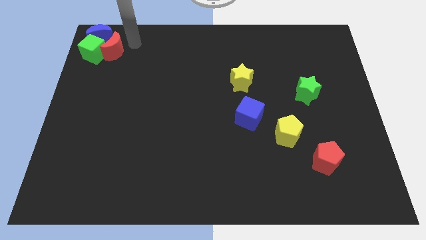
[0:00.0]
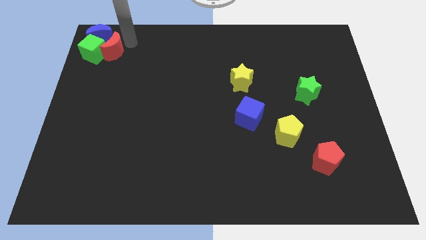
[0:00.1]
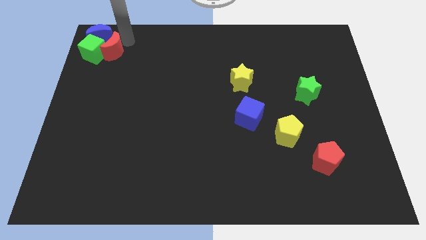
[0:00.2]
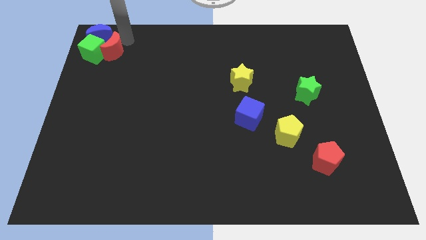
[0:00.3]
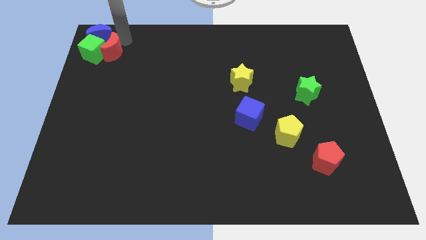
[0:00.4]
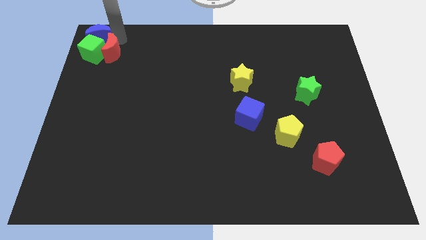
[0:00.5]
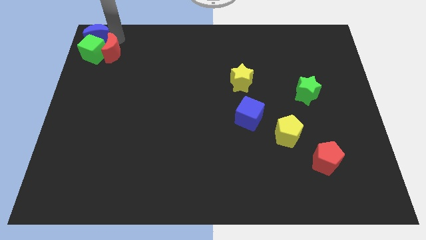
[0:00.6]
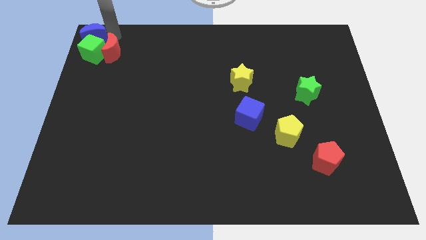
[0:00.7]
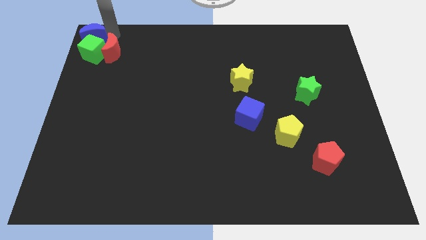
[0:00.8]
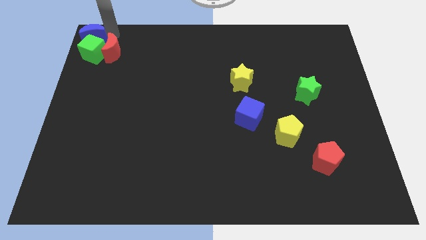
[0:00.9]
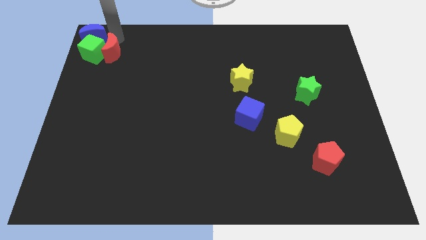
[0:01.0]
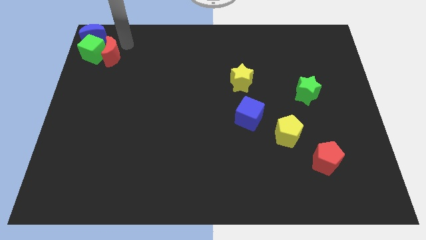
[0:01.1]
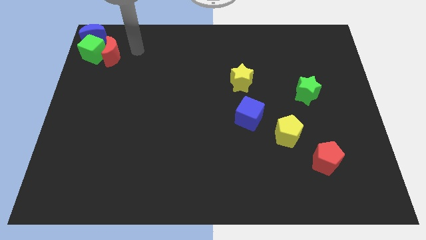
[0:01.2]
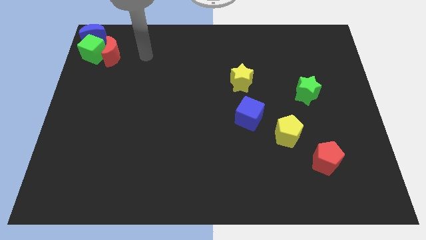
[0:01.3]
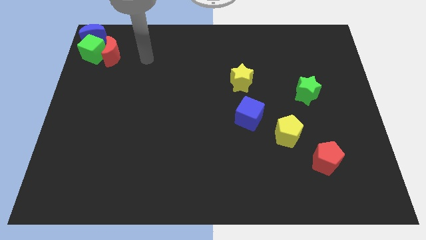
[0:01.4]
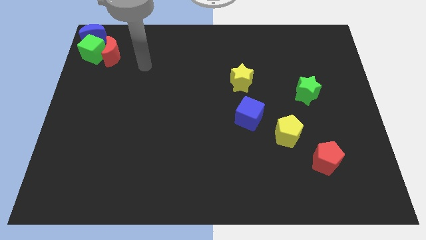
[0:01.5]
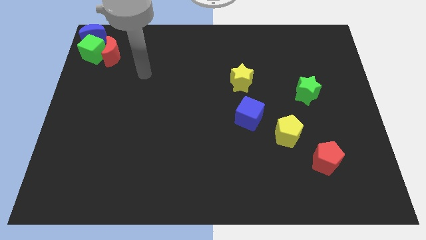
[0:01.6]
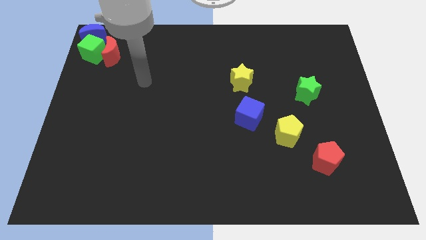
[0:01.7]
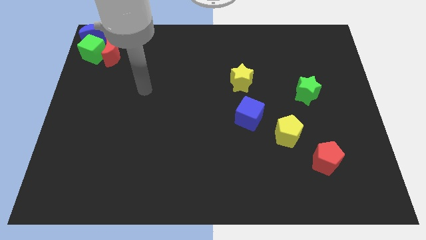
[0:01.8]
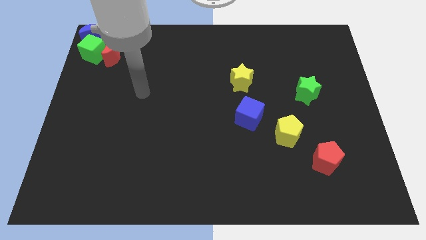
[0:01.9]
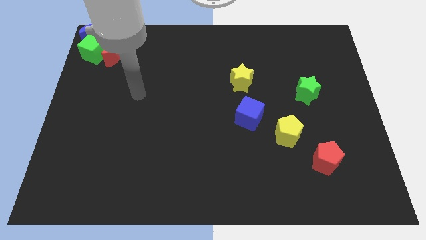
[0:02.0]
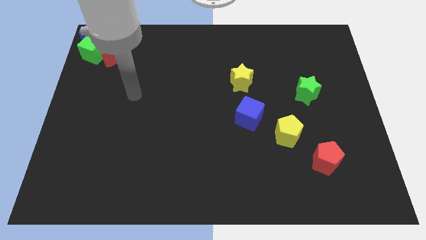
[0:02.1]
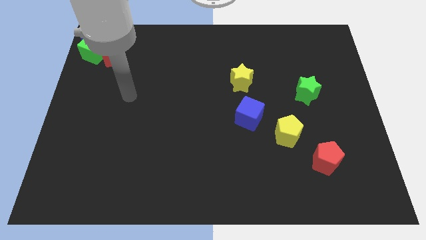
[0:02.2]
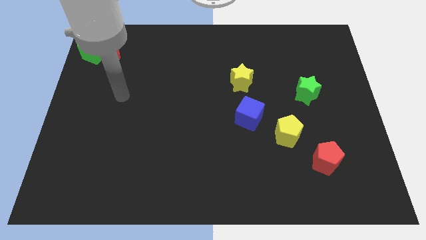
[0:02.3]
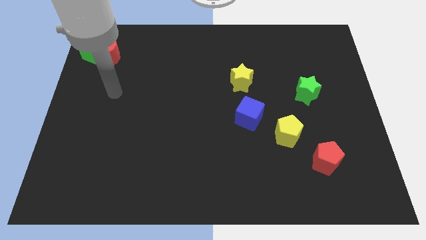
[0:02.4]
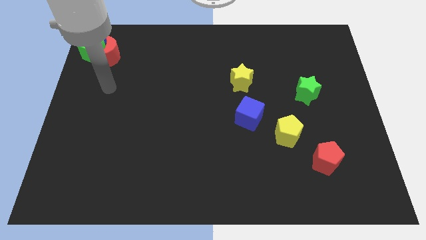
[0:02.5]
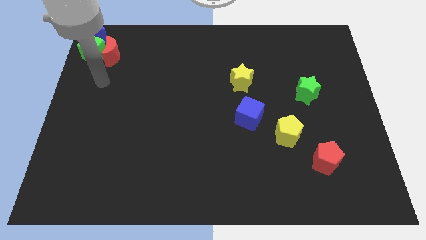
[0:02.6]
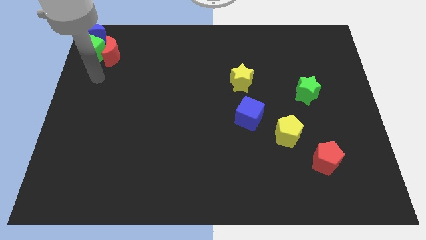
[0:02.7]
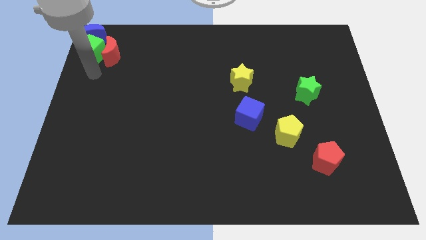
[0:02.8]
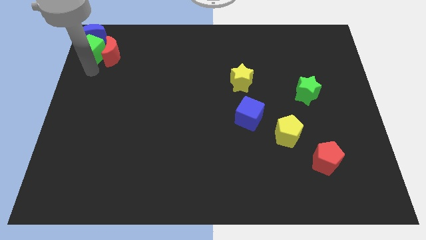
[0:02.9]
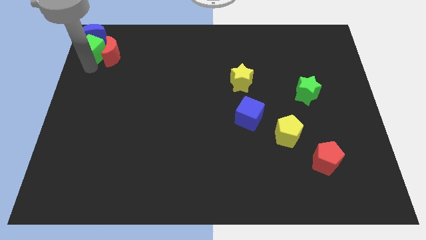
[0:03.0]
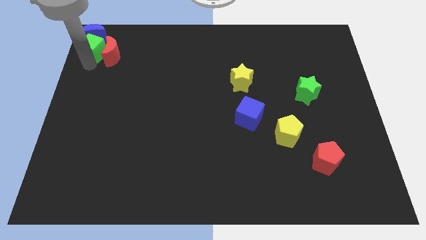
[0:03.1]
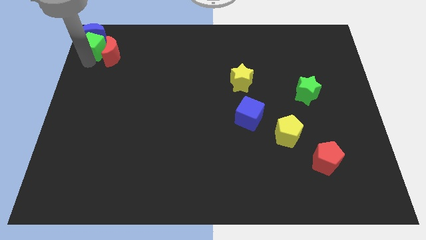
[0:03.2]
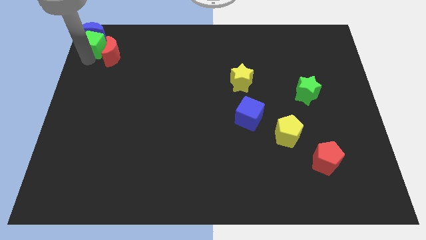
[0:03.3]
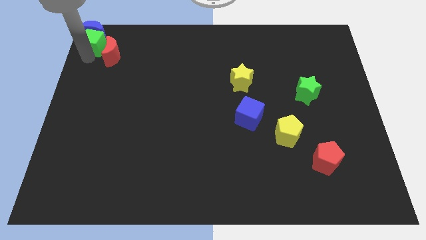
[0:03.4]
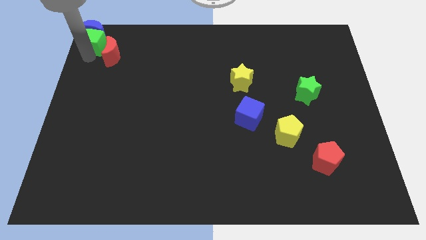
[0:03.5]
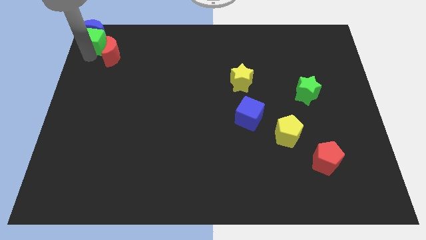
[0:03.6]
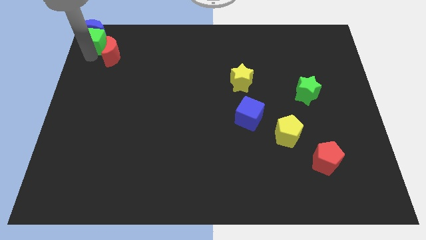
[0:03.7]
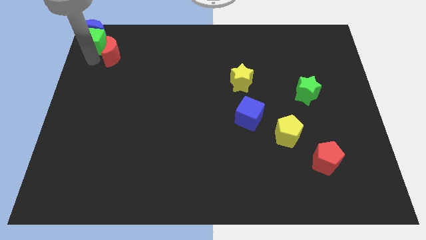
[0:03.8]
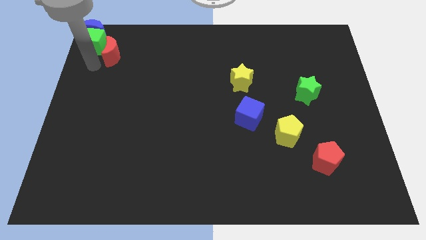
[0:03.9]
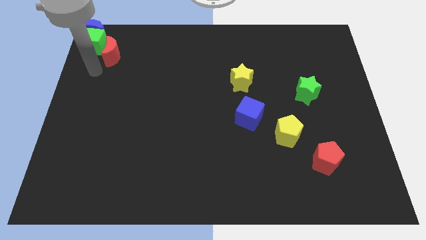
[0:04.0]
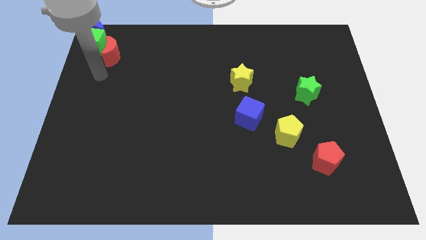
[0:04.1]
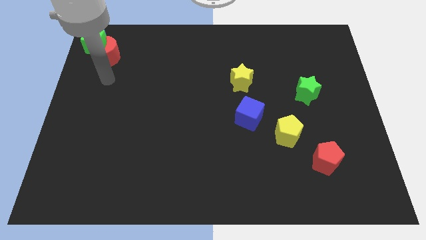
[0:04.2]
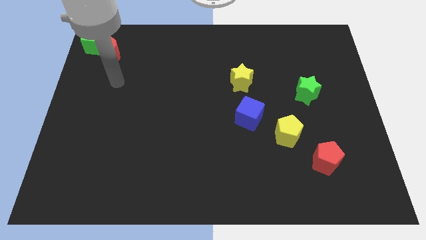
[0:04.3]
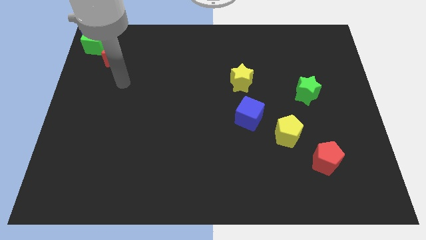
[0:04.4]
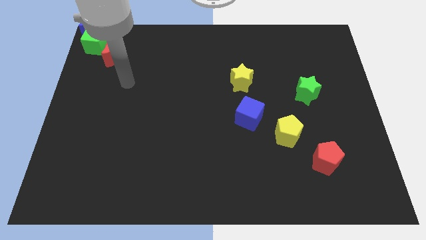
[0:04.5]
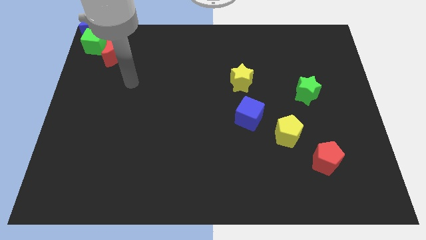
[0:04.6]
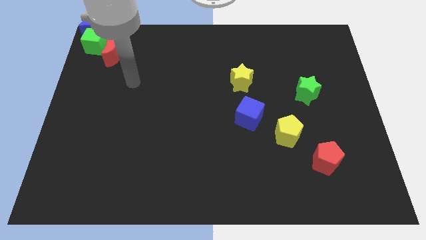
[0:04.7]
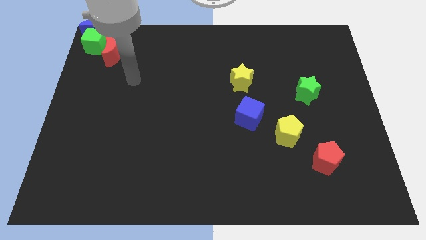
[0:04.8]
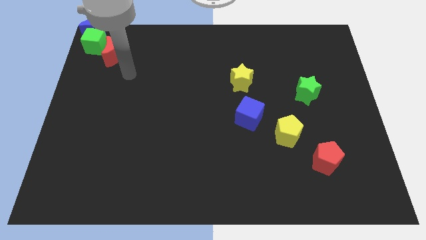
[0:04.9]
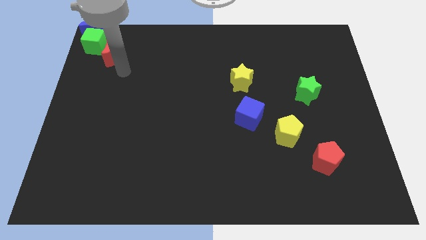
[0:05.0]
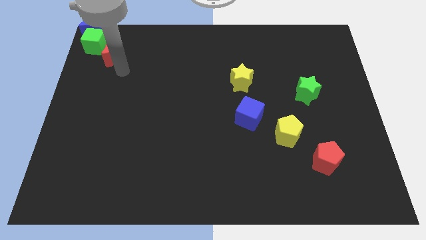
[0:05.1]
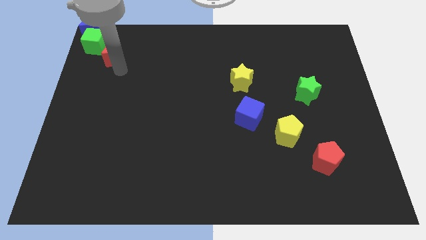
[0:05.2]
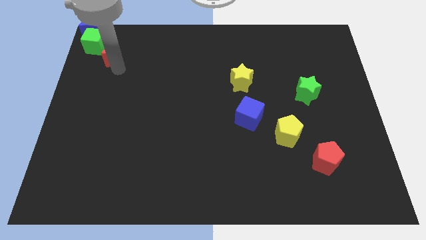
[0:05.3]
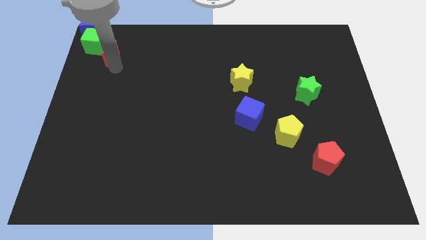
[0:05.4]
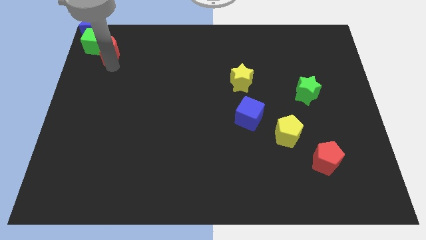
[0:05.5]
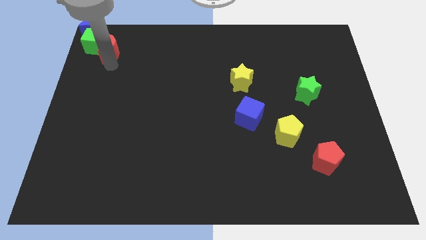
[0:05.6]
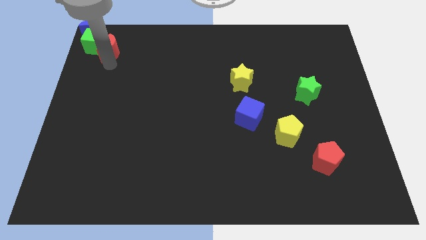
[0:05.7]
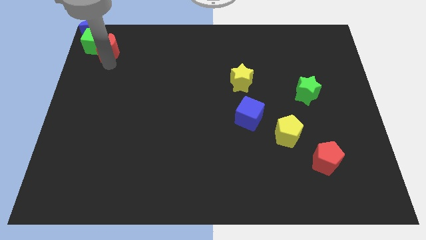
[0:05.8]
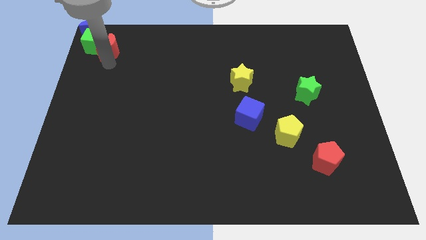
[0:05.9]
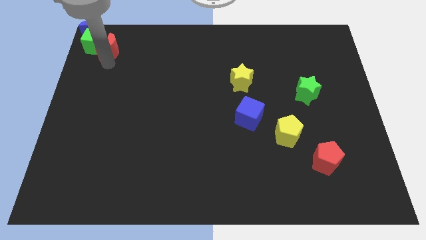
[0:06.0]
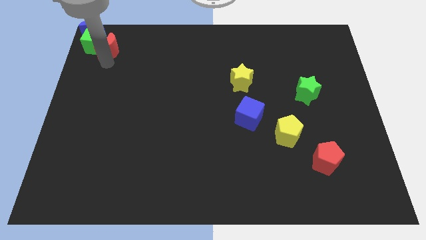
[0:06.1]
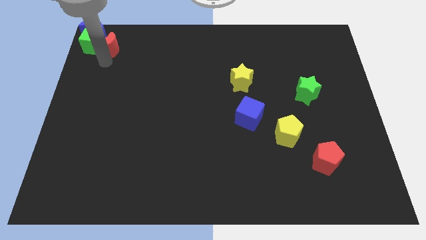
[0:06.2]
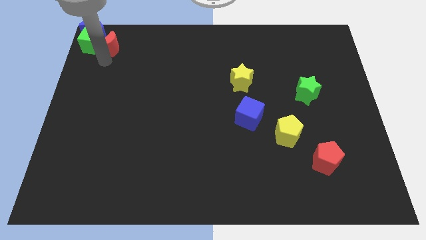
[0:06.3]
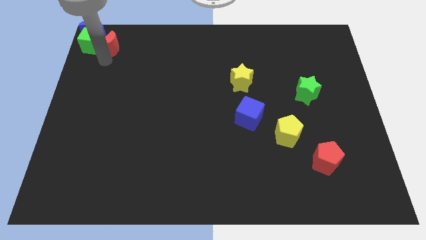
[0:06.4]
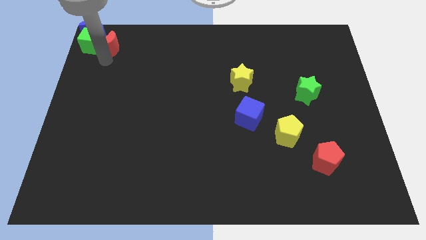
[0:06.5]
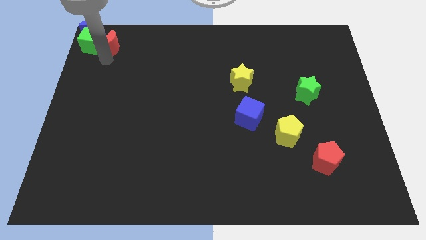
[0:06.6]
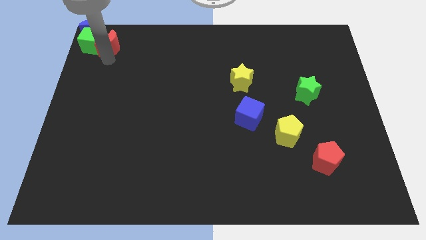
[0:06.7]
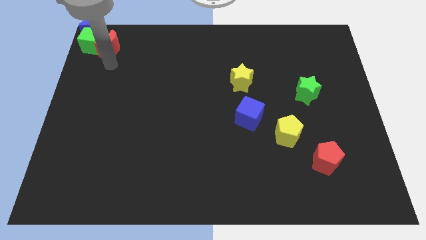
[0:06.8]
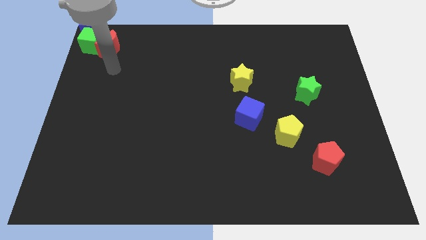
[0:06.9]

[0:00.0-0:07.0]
push red crescent along with green cube and blue crescent at the top left corner of the board

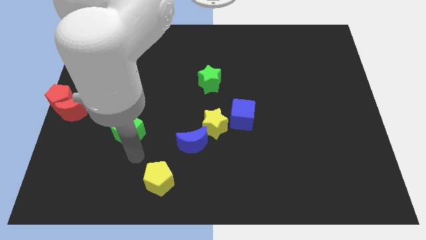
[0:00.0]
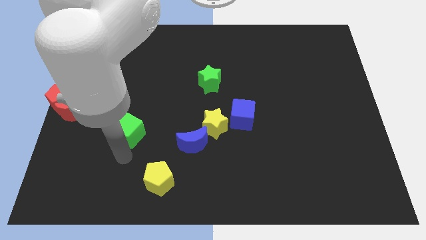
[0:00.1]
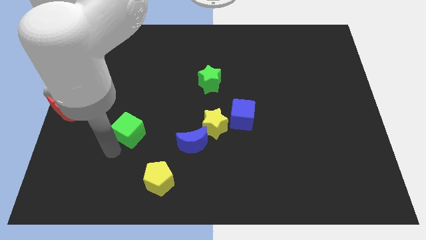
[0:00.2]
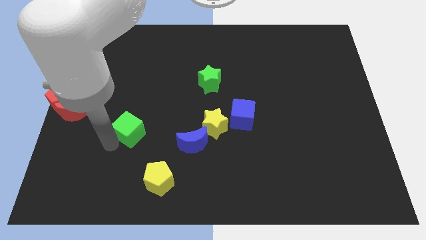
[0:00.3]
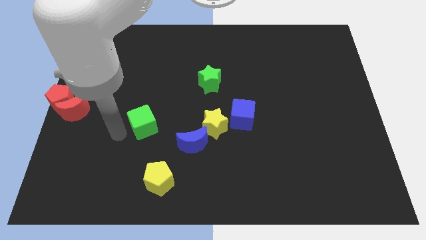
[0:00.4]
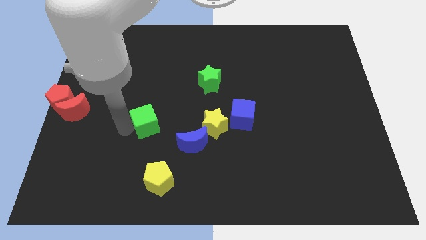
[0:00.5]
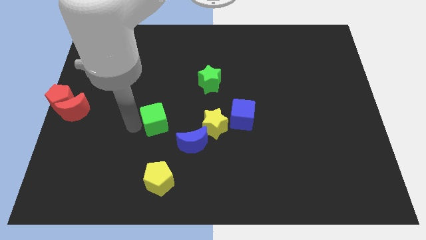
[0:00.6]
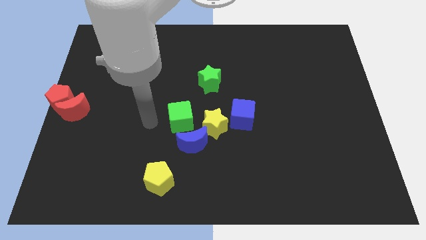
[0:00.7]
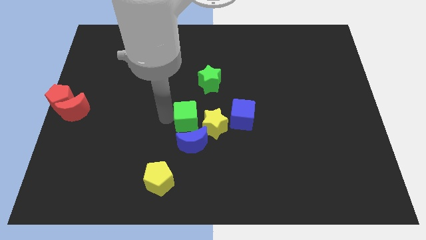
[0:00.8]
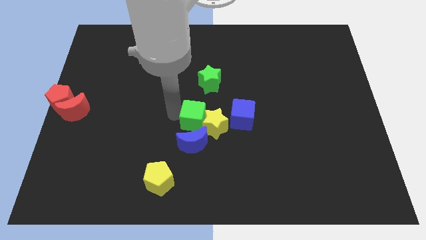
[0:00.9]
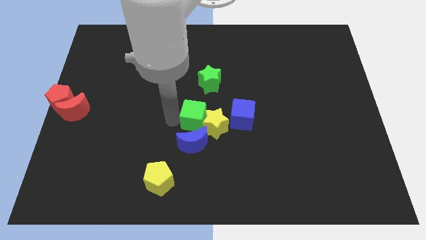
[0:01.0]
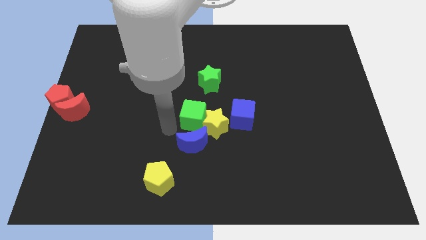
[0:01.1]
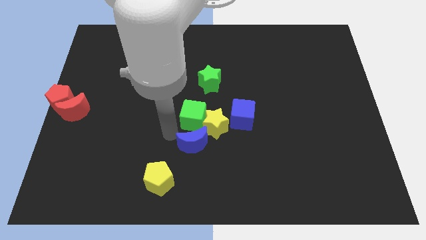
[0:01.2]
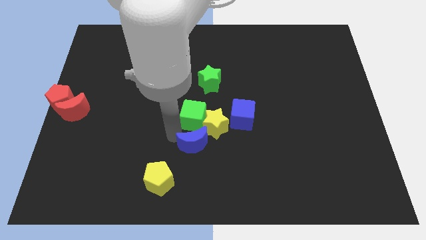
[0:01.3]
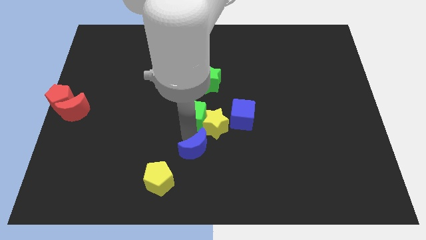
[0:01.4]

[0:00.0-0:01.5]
move the green cube into the yellow star

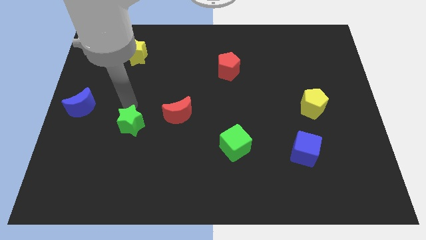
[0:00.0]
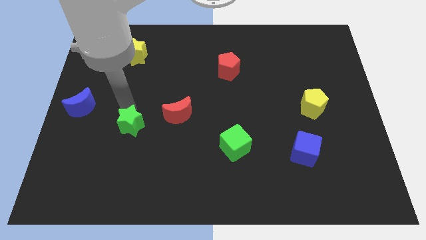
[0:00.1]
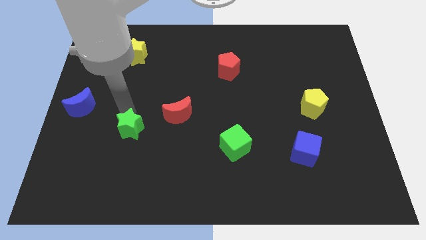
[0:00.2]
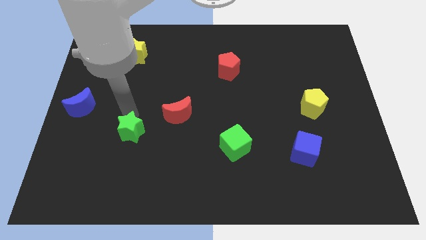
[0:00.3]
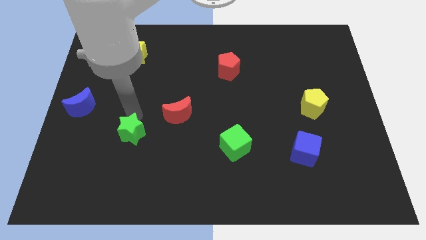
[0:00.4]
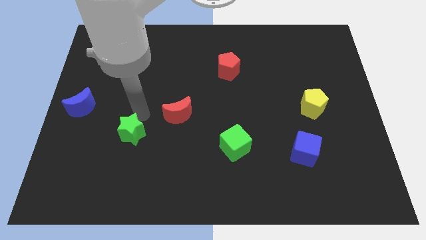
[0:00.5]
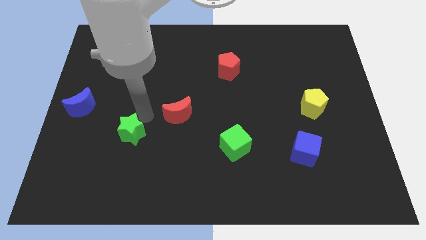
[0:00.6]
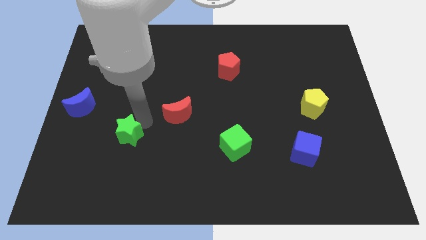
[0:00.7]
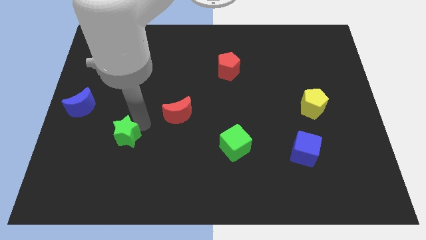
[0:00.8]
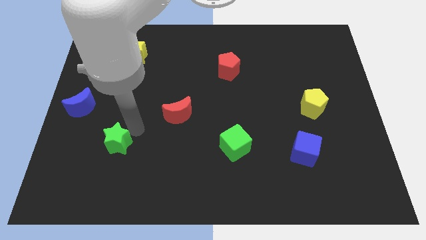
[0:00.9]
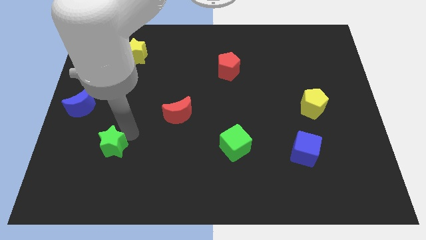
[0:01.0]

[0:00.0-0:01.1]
put the green star horizontally to the left of the green cube
